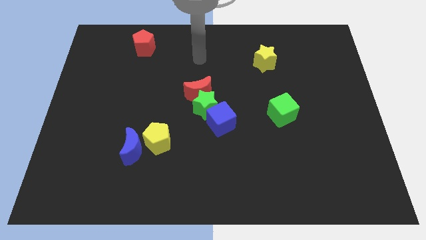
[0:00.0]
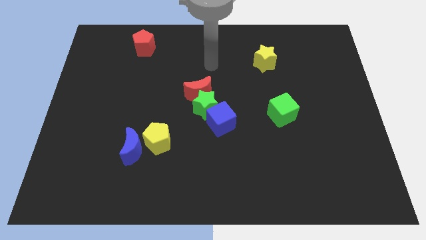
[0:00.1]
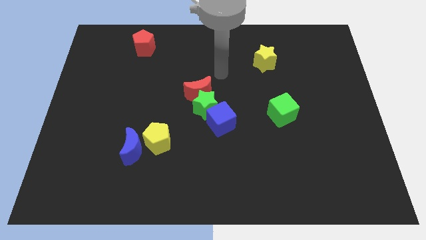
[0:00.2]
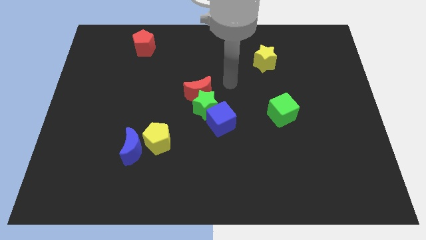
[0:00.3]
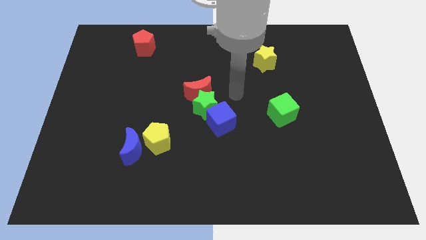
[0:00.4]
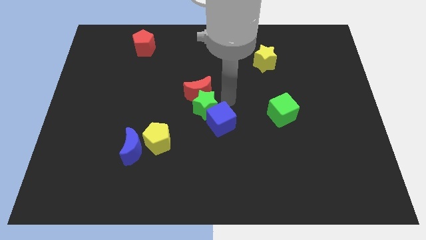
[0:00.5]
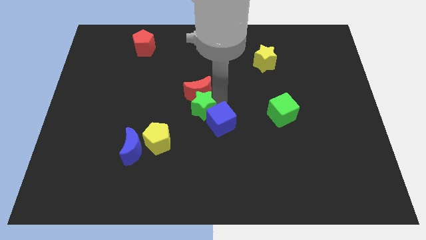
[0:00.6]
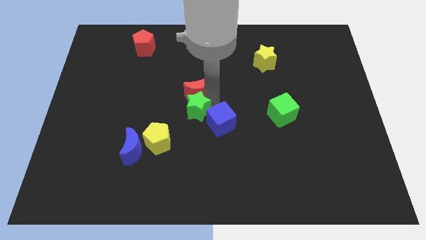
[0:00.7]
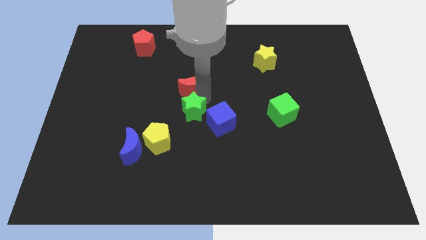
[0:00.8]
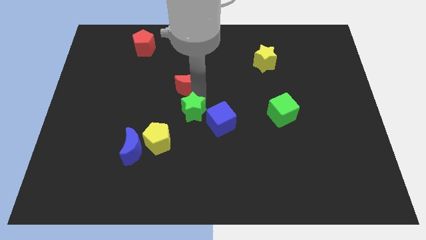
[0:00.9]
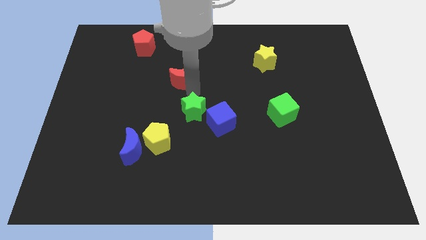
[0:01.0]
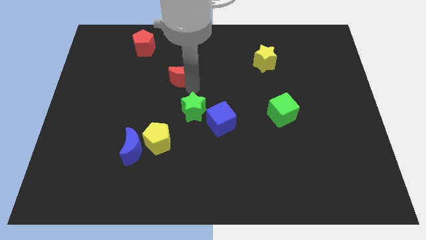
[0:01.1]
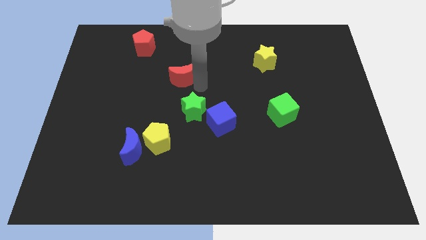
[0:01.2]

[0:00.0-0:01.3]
separate the green star and red moon

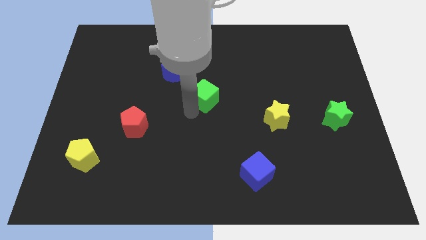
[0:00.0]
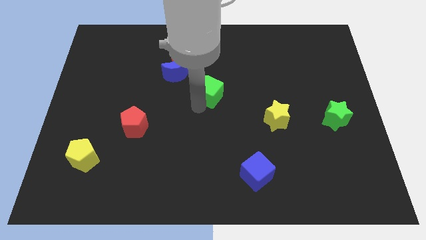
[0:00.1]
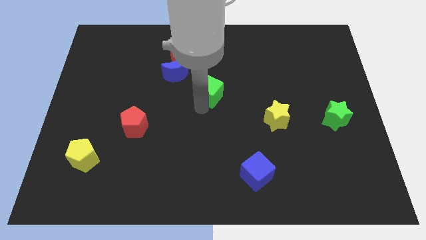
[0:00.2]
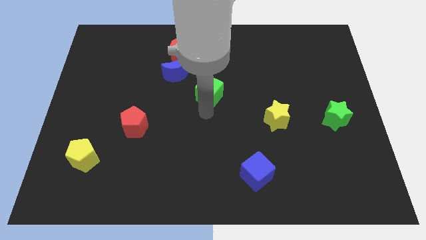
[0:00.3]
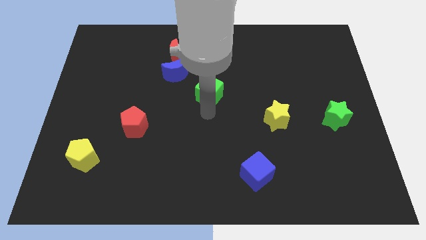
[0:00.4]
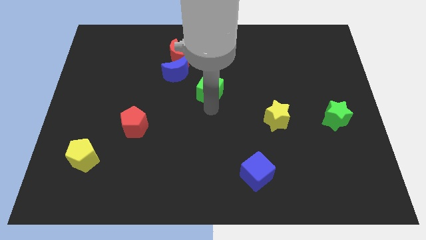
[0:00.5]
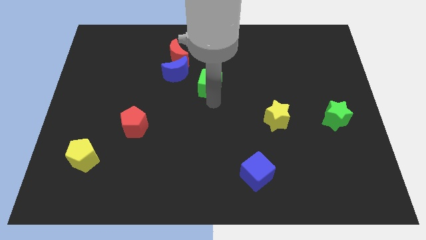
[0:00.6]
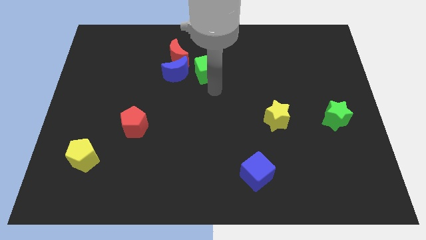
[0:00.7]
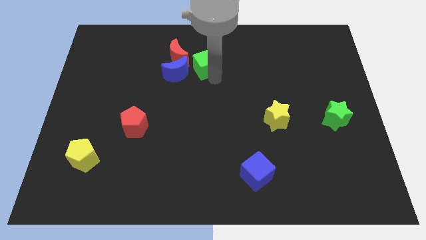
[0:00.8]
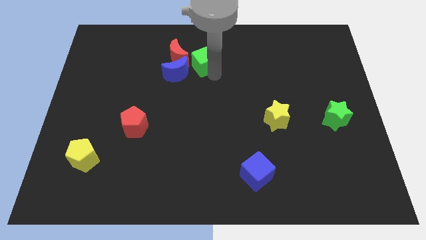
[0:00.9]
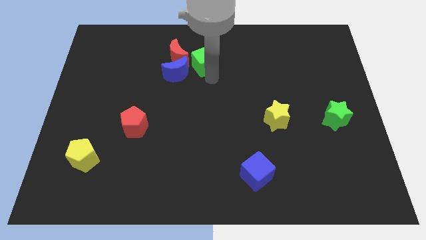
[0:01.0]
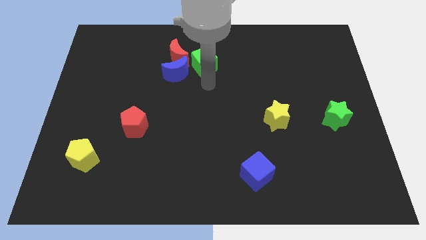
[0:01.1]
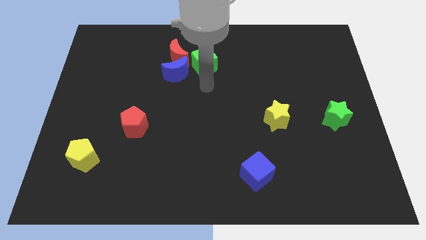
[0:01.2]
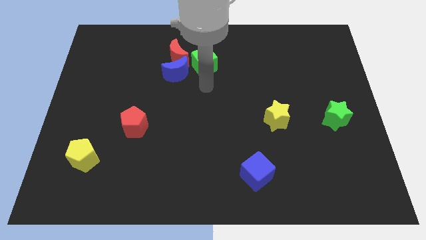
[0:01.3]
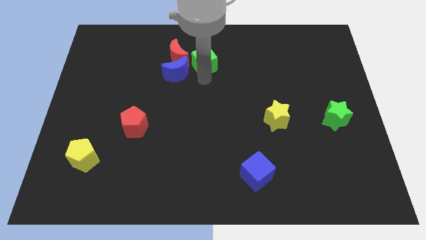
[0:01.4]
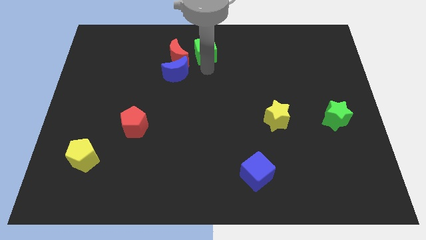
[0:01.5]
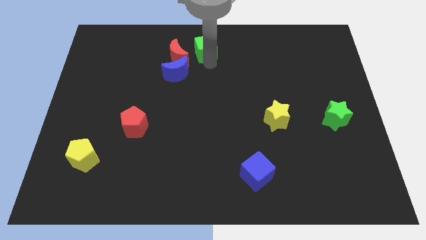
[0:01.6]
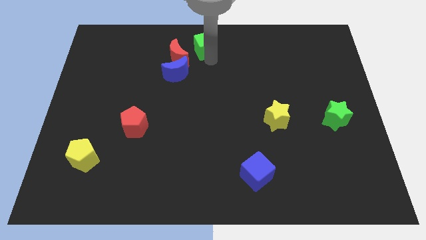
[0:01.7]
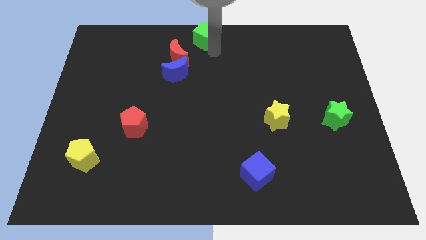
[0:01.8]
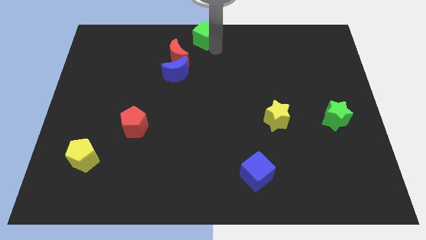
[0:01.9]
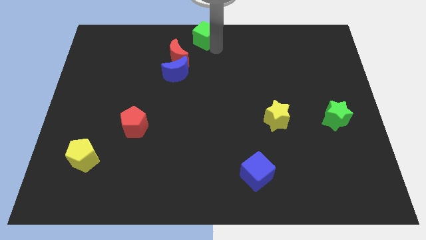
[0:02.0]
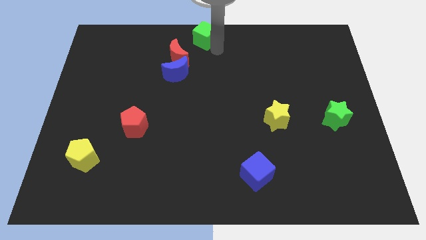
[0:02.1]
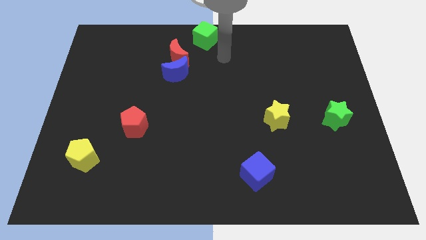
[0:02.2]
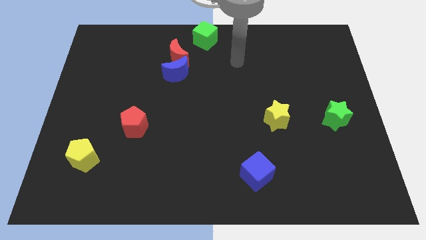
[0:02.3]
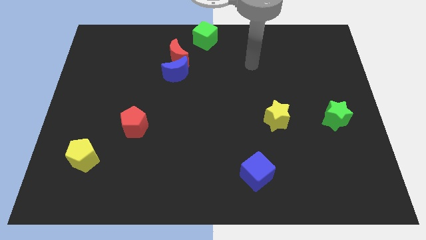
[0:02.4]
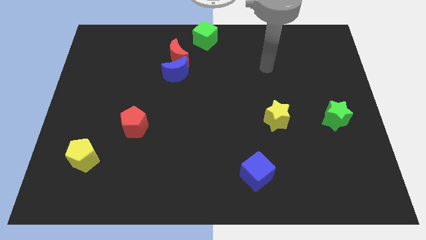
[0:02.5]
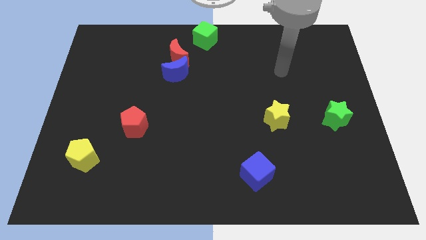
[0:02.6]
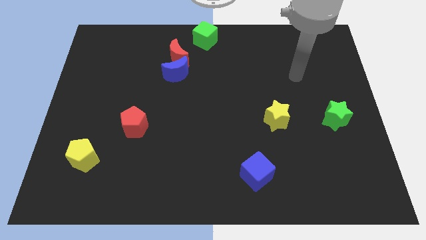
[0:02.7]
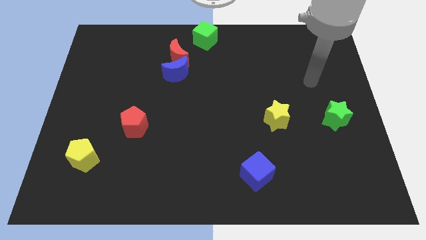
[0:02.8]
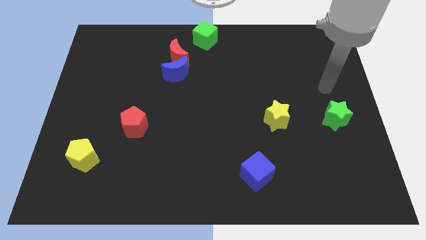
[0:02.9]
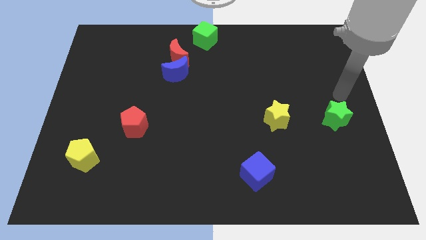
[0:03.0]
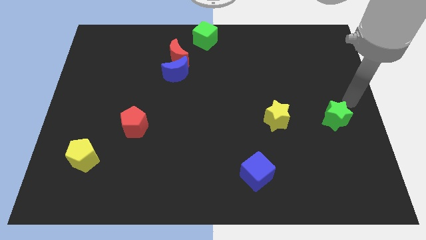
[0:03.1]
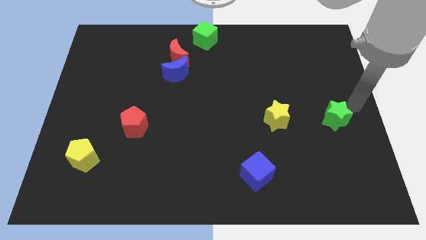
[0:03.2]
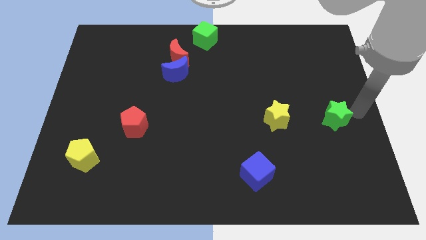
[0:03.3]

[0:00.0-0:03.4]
push the green cube to the top

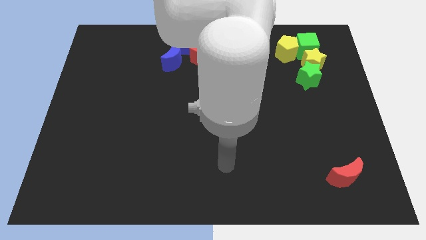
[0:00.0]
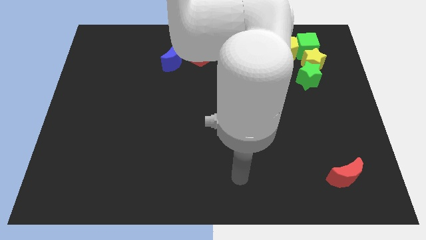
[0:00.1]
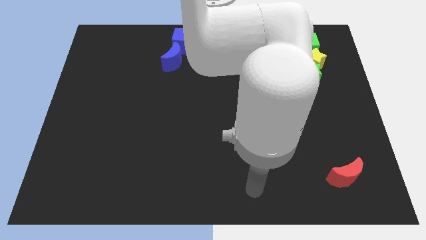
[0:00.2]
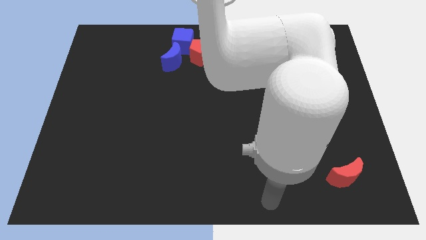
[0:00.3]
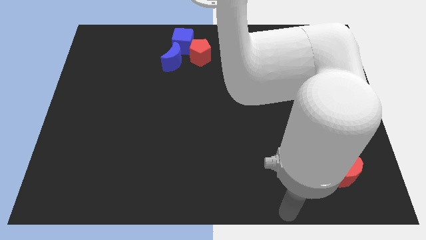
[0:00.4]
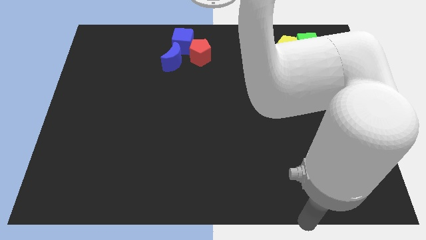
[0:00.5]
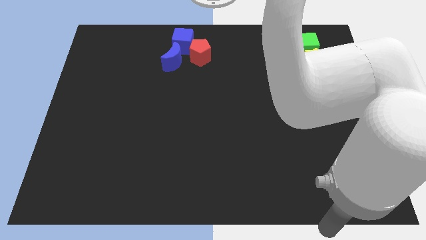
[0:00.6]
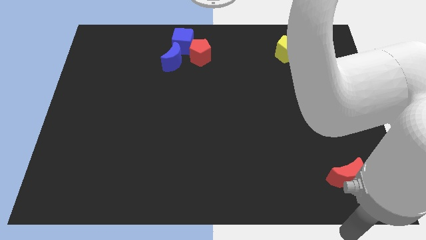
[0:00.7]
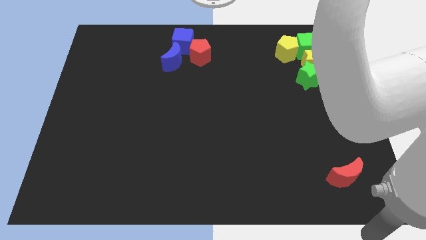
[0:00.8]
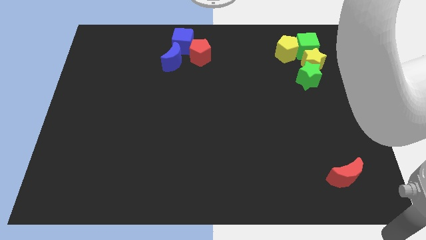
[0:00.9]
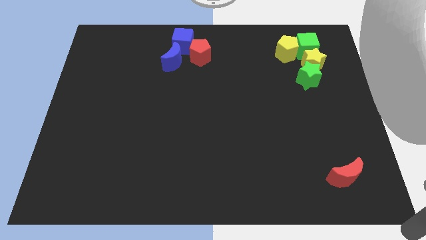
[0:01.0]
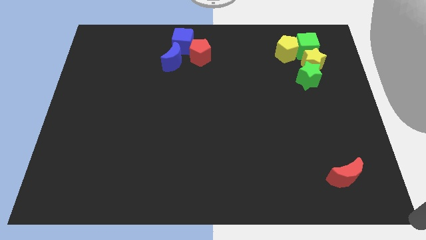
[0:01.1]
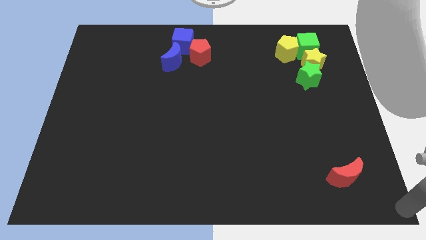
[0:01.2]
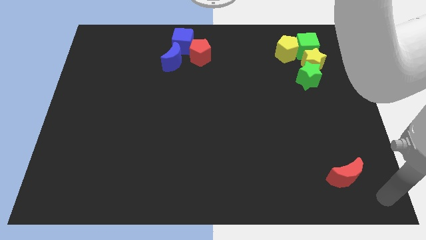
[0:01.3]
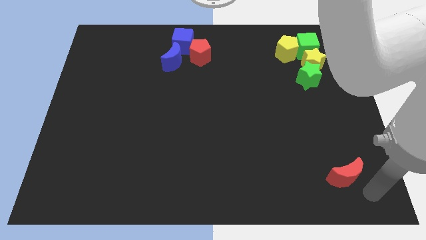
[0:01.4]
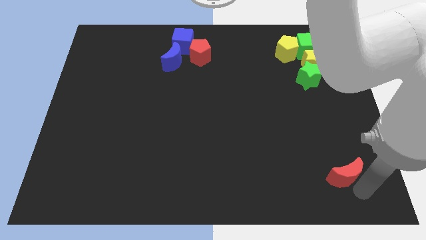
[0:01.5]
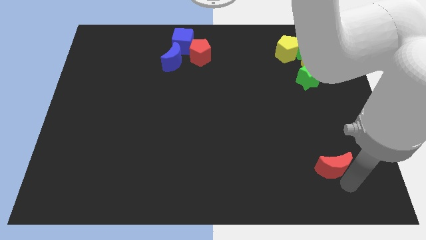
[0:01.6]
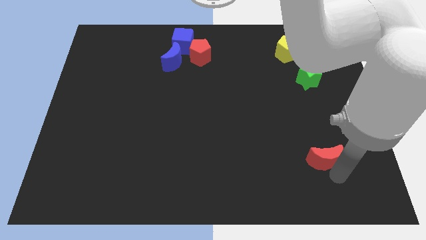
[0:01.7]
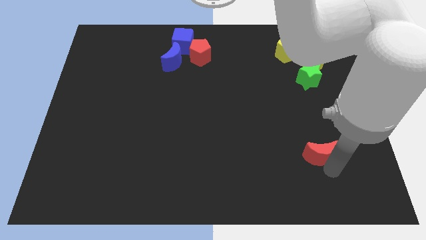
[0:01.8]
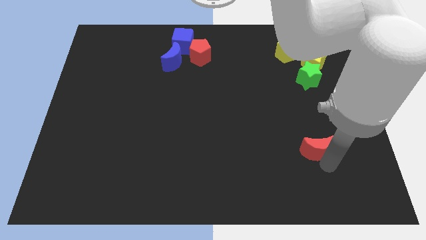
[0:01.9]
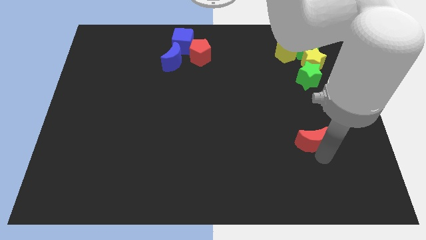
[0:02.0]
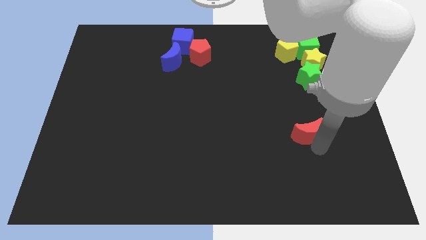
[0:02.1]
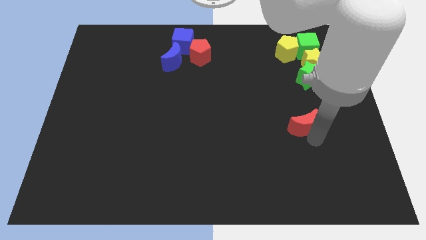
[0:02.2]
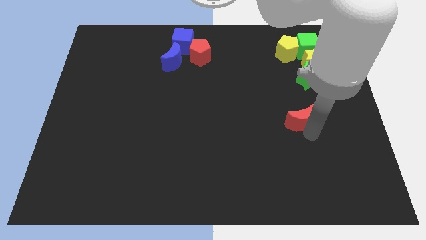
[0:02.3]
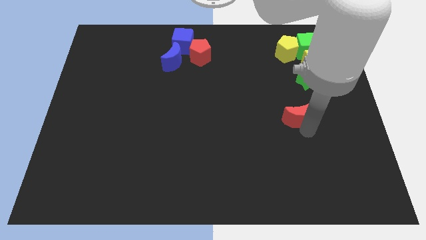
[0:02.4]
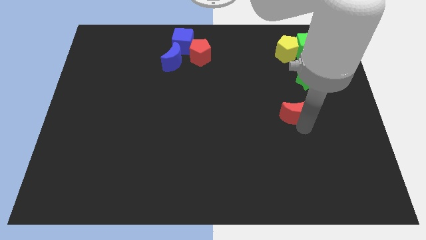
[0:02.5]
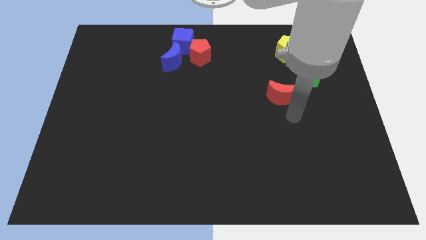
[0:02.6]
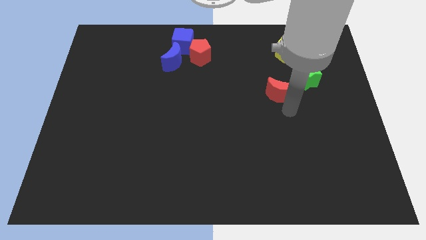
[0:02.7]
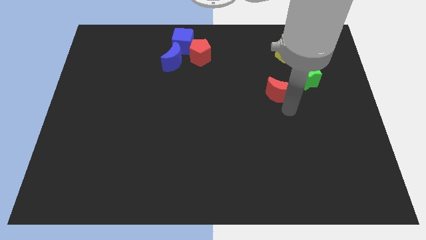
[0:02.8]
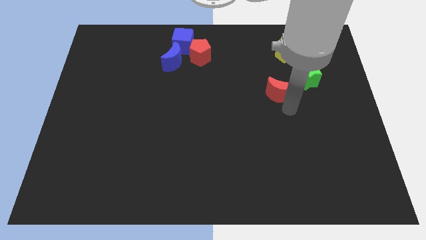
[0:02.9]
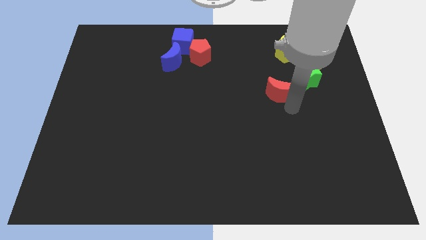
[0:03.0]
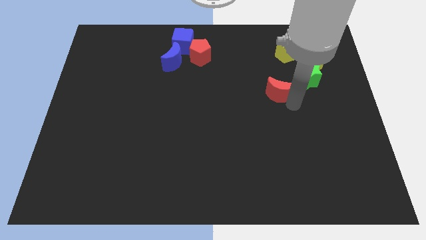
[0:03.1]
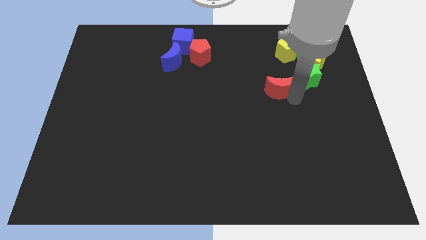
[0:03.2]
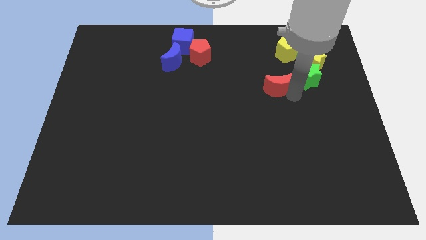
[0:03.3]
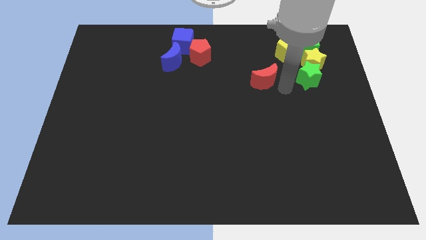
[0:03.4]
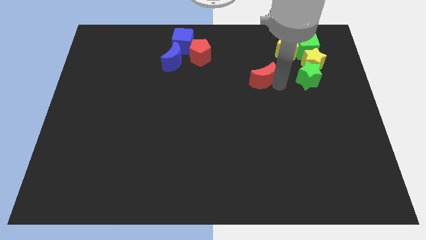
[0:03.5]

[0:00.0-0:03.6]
place the red moon to the left of the green star

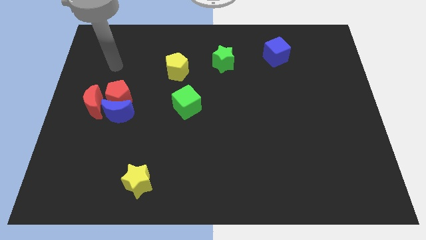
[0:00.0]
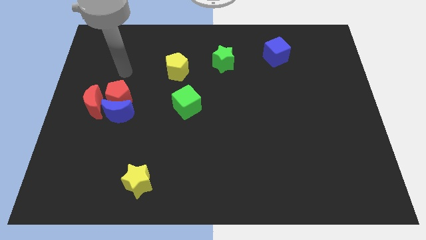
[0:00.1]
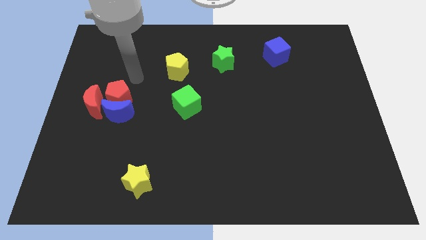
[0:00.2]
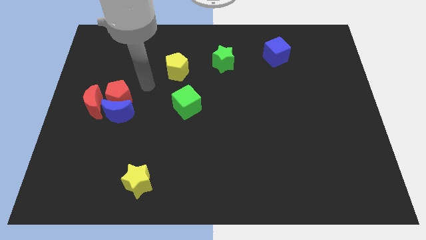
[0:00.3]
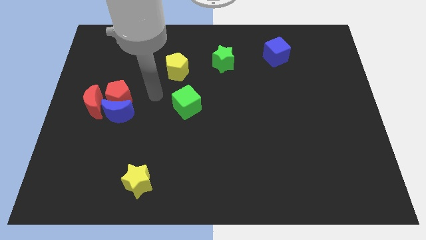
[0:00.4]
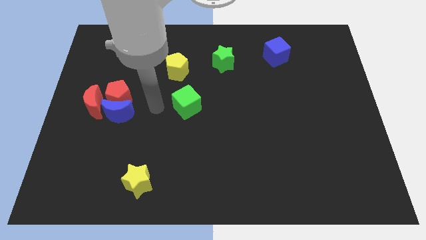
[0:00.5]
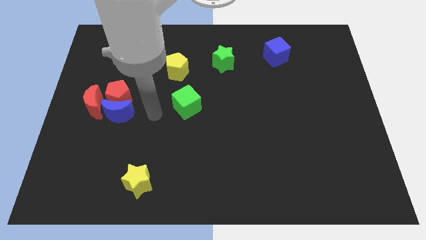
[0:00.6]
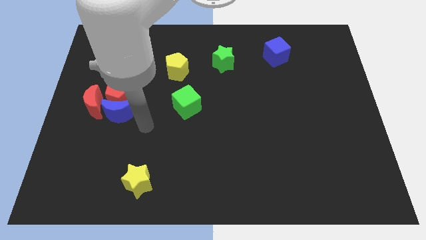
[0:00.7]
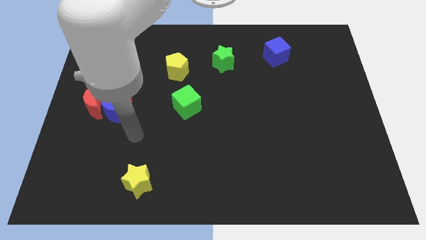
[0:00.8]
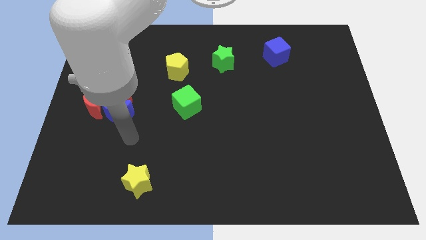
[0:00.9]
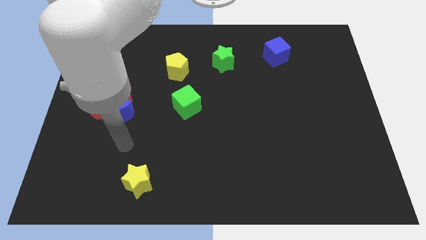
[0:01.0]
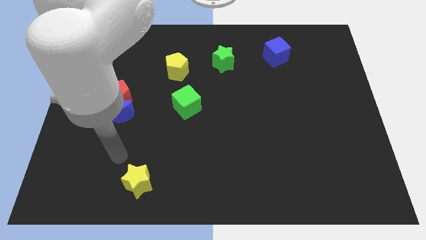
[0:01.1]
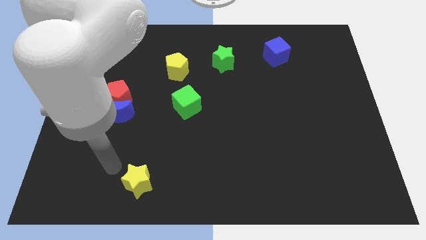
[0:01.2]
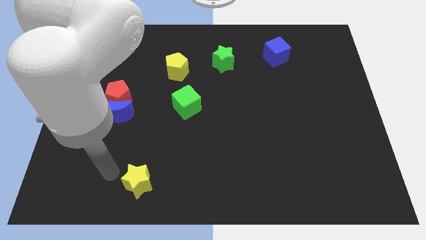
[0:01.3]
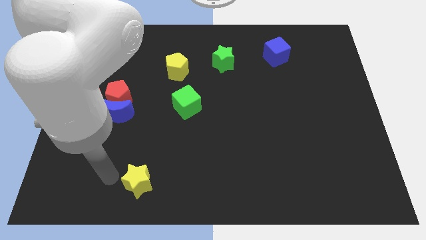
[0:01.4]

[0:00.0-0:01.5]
place your arm at the left side of the yellow star
